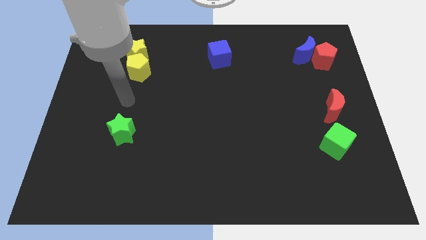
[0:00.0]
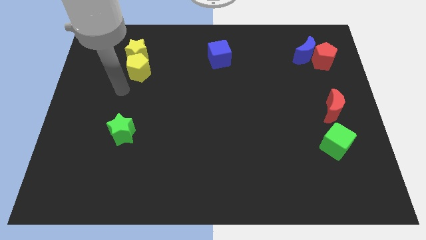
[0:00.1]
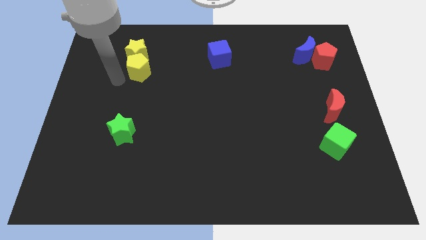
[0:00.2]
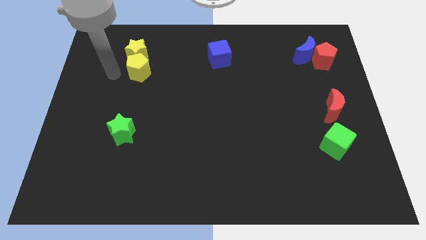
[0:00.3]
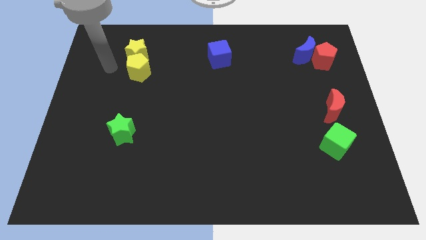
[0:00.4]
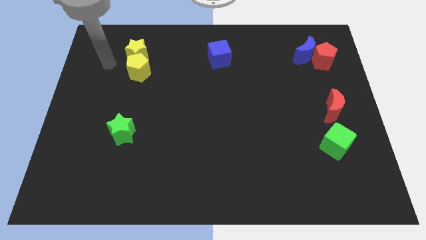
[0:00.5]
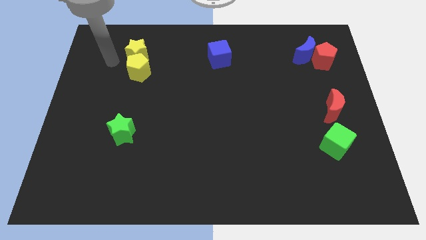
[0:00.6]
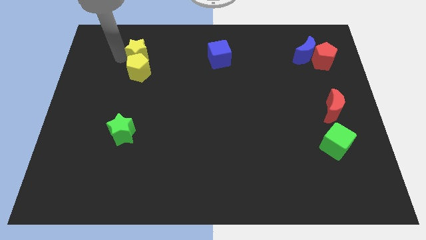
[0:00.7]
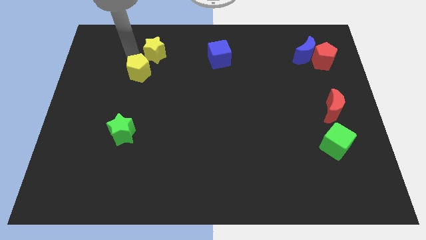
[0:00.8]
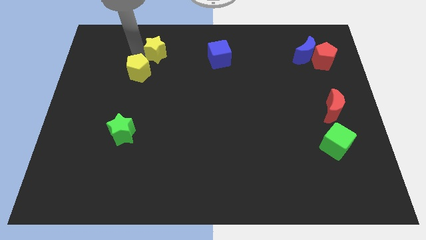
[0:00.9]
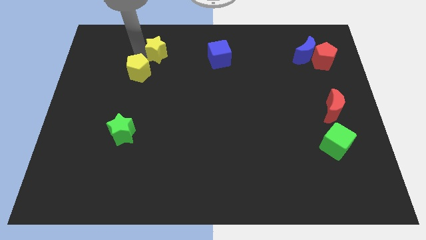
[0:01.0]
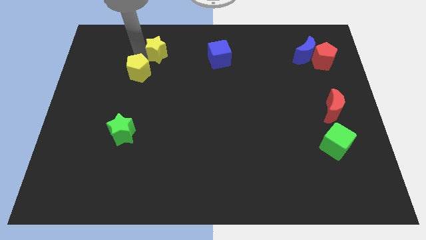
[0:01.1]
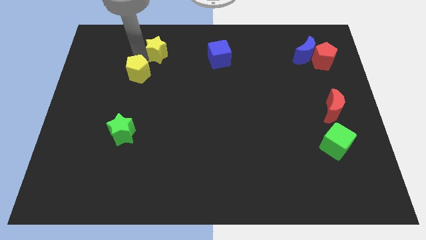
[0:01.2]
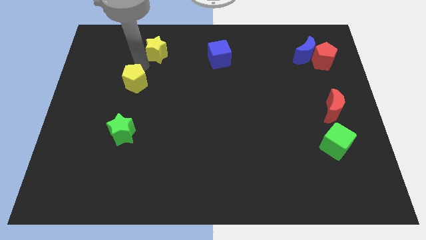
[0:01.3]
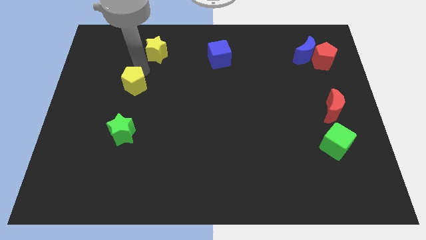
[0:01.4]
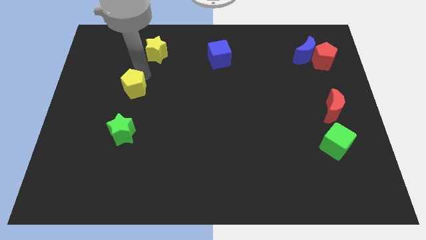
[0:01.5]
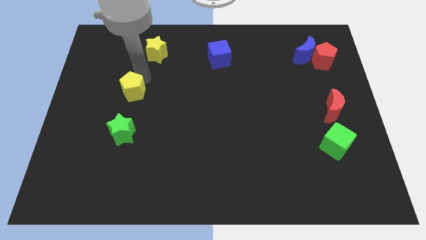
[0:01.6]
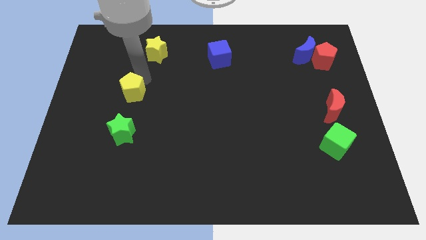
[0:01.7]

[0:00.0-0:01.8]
separate the yellow pentagon from yellow star

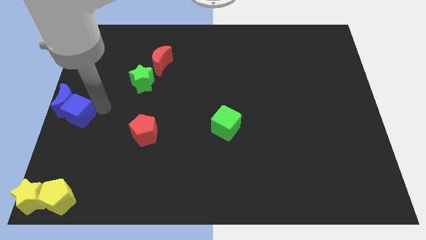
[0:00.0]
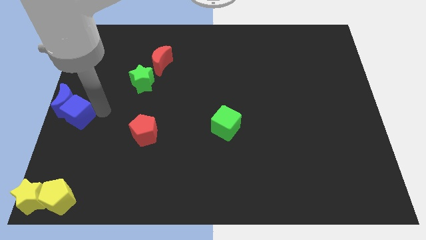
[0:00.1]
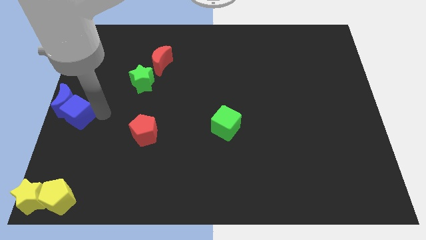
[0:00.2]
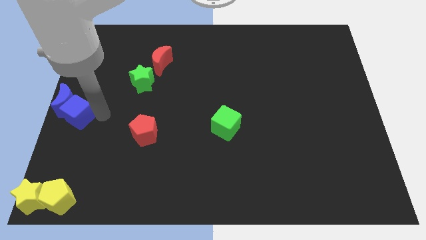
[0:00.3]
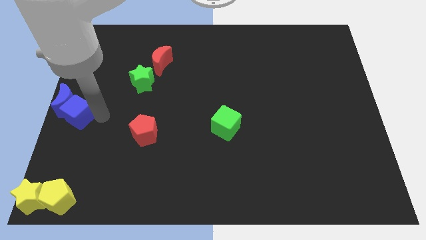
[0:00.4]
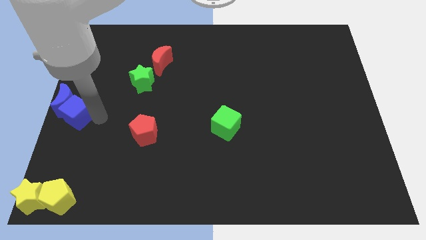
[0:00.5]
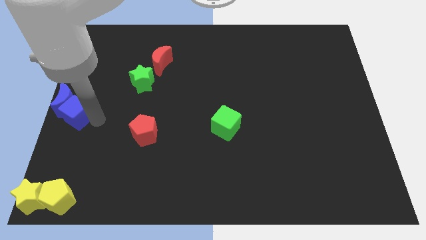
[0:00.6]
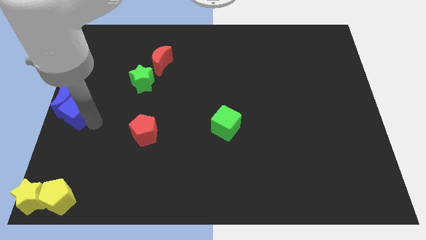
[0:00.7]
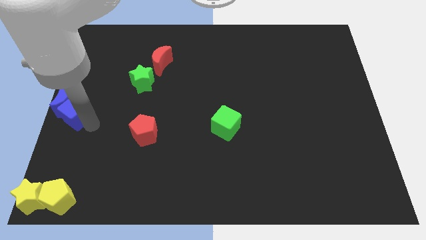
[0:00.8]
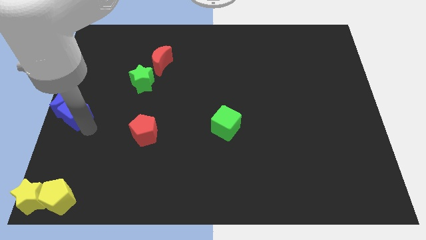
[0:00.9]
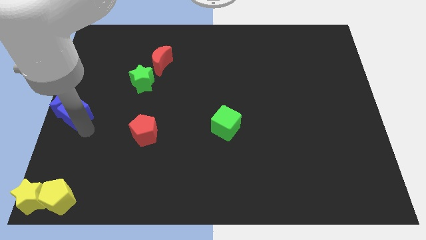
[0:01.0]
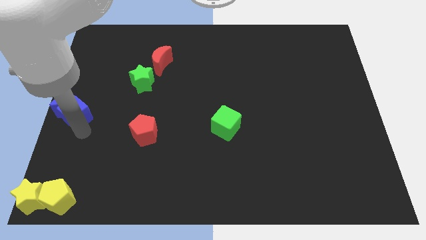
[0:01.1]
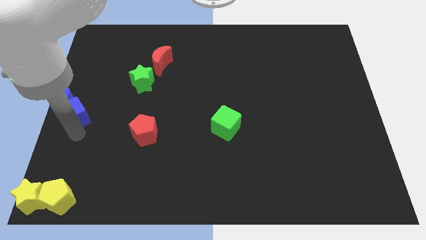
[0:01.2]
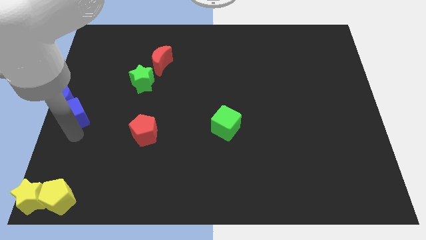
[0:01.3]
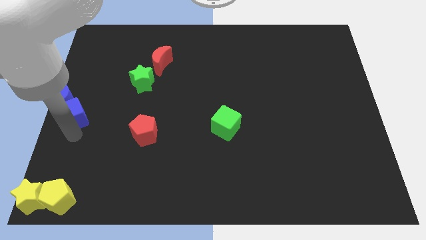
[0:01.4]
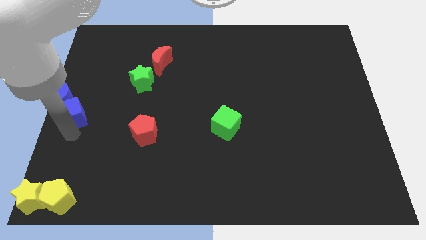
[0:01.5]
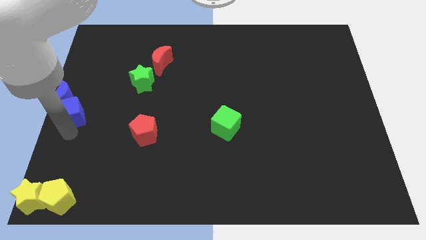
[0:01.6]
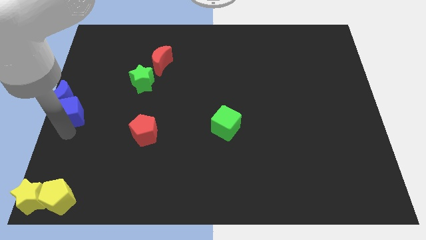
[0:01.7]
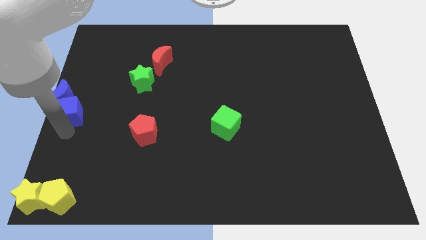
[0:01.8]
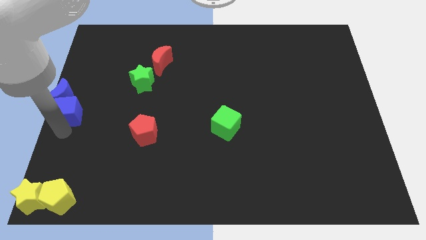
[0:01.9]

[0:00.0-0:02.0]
adjust the blue cube vertically above the yellow blocks

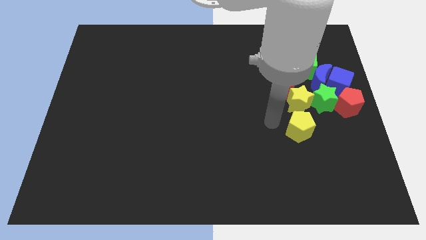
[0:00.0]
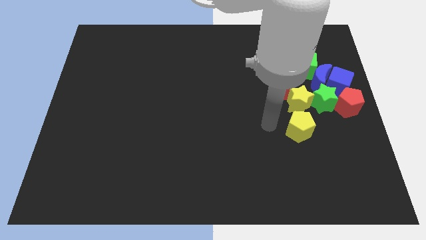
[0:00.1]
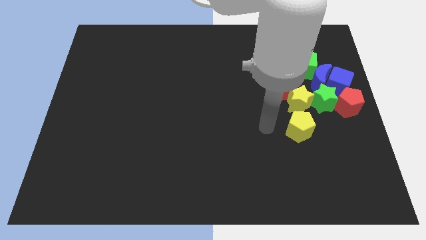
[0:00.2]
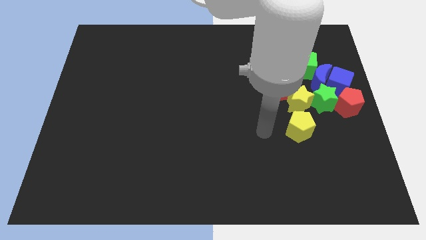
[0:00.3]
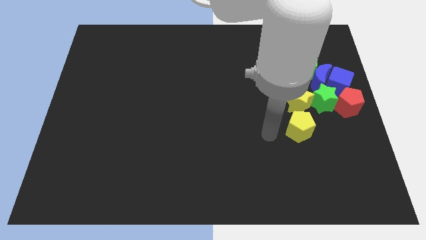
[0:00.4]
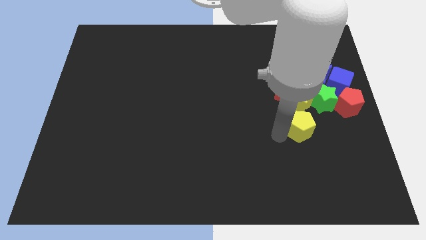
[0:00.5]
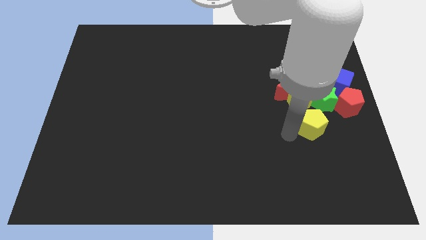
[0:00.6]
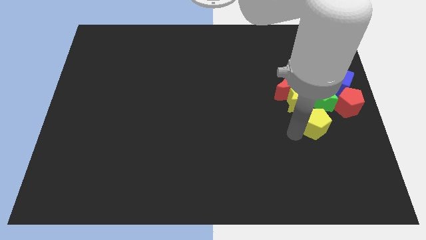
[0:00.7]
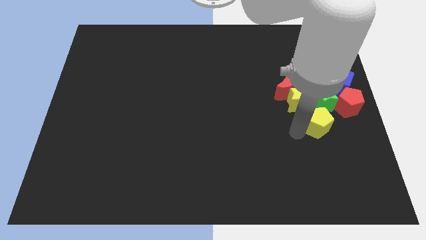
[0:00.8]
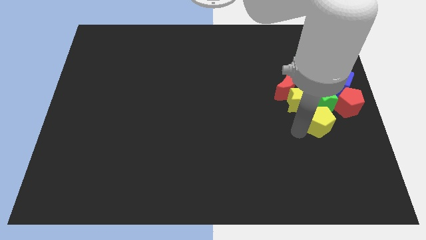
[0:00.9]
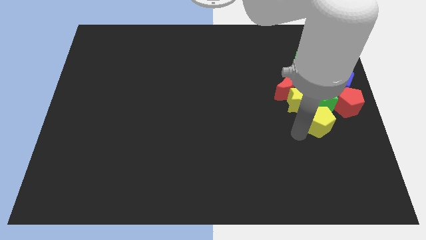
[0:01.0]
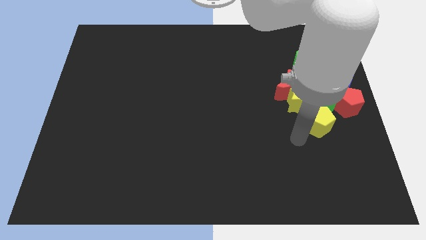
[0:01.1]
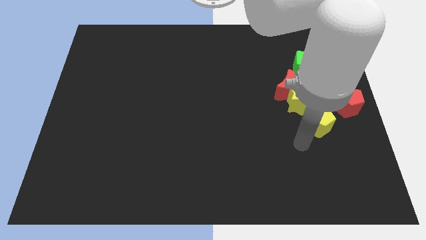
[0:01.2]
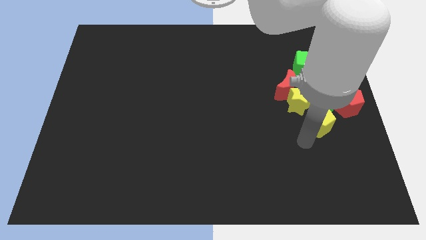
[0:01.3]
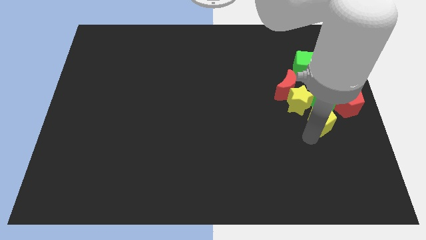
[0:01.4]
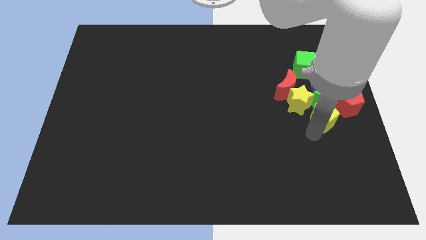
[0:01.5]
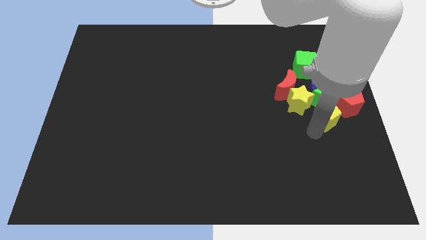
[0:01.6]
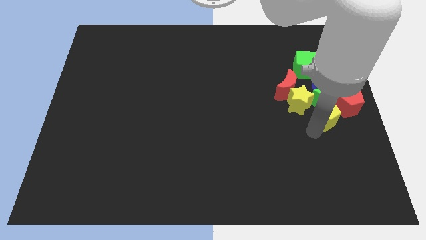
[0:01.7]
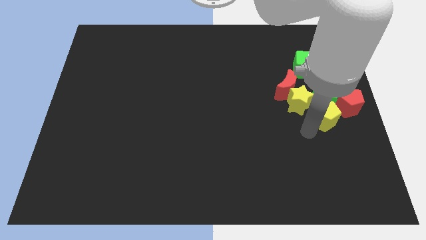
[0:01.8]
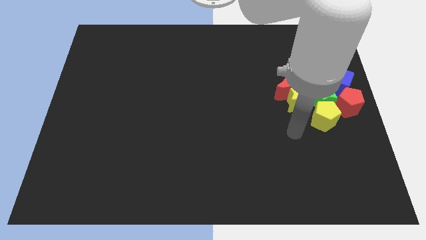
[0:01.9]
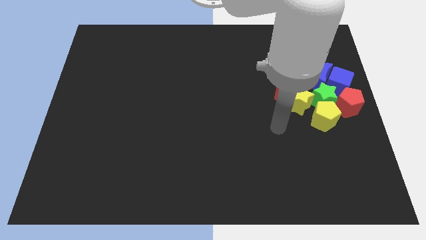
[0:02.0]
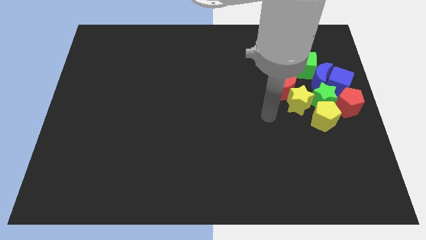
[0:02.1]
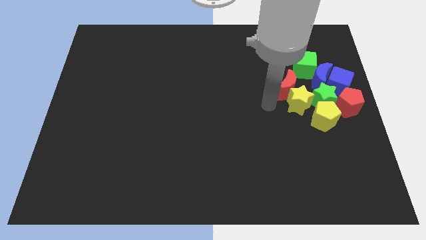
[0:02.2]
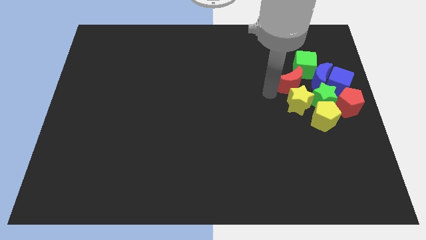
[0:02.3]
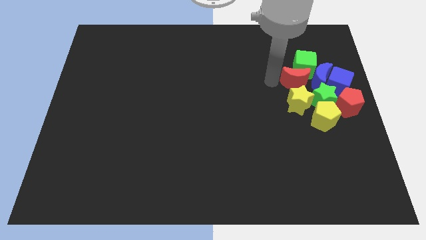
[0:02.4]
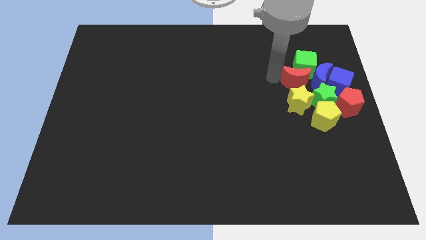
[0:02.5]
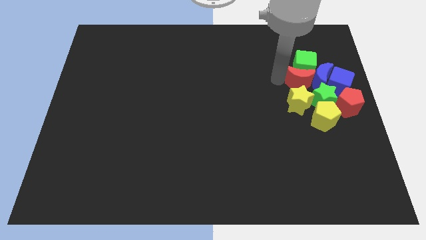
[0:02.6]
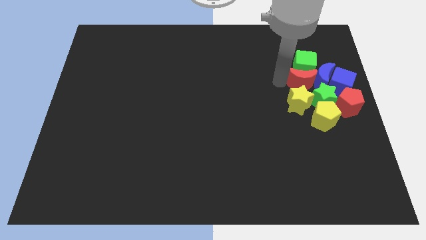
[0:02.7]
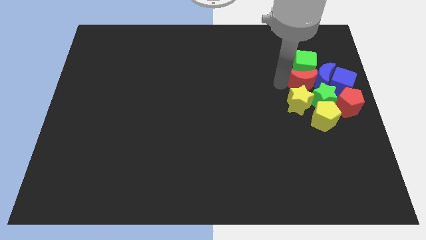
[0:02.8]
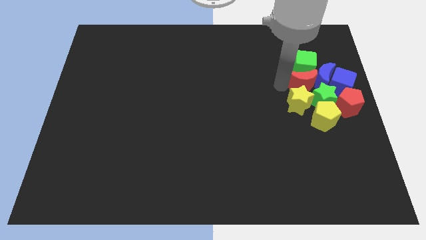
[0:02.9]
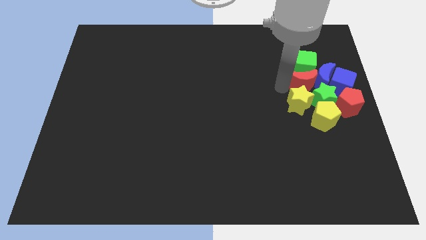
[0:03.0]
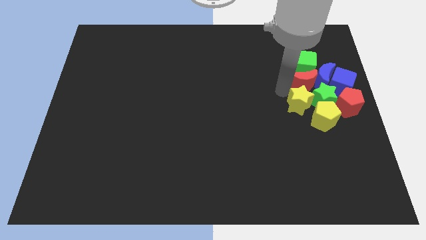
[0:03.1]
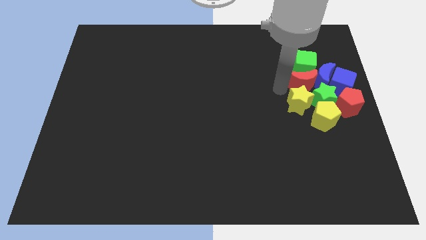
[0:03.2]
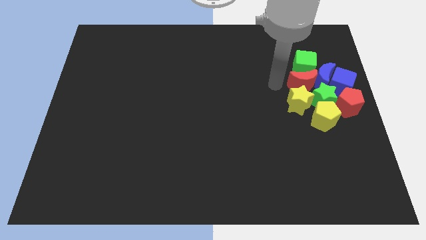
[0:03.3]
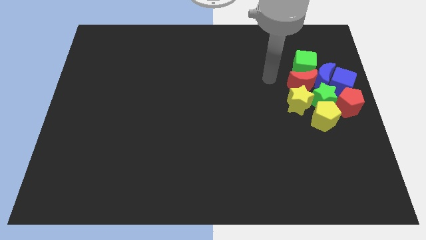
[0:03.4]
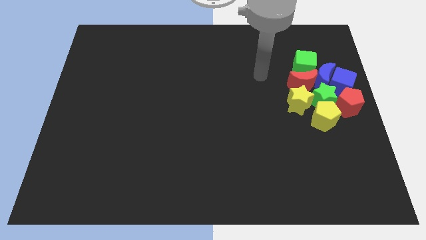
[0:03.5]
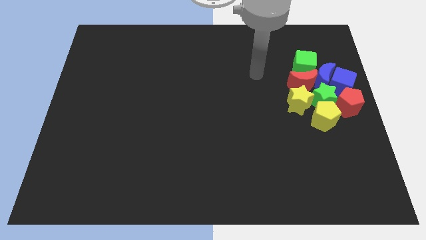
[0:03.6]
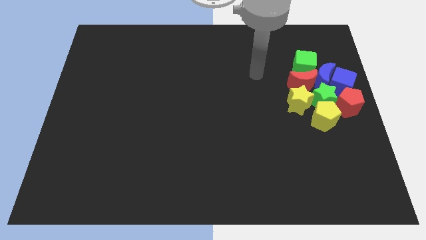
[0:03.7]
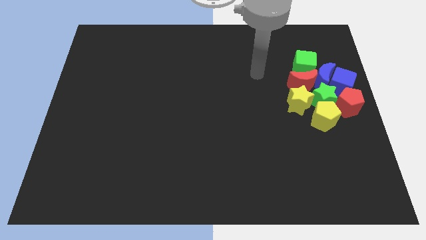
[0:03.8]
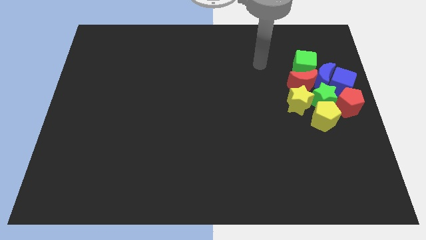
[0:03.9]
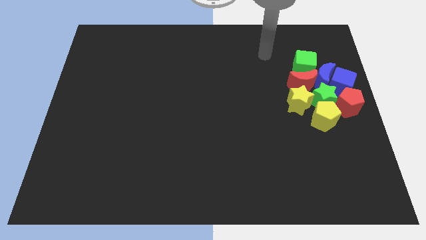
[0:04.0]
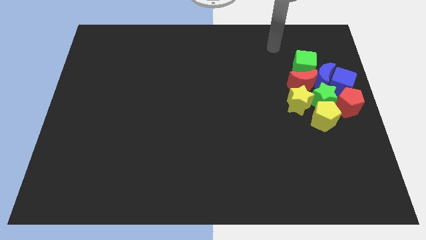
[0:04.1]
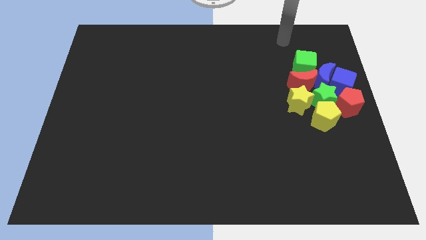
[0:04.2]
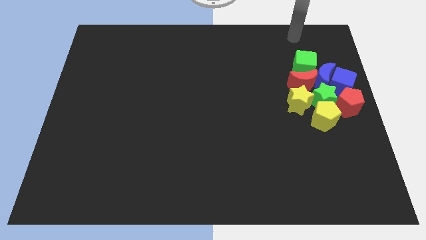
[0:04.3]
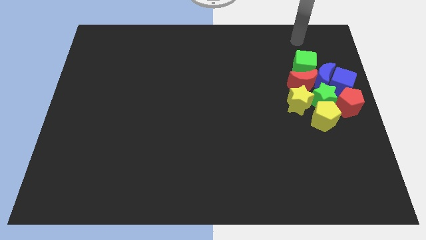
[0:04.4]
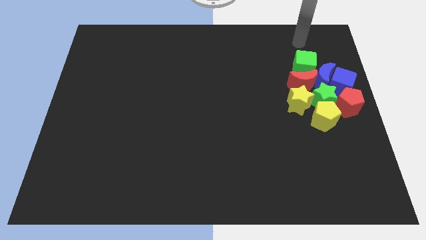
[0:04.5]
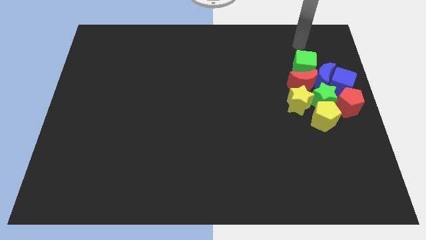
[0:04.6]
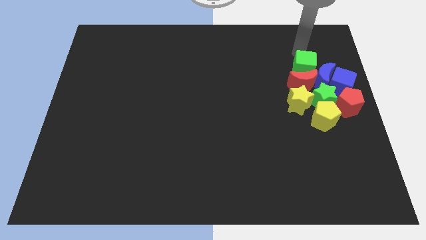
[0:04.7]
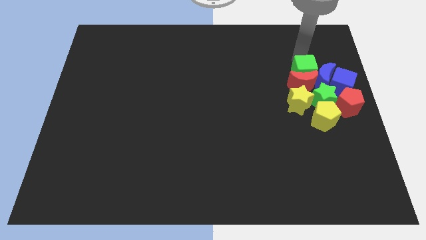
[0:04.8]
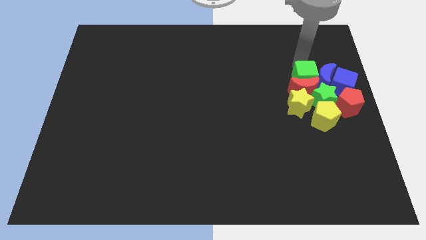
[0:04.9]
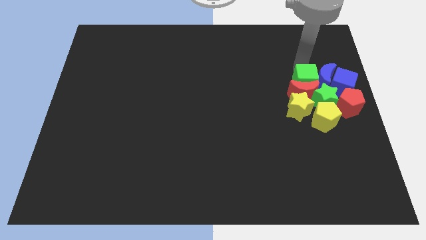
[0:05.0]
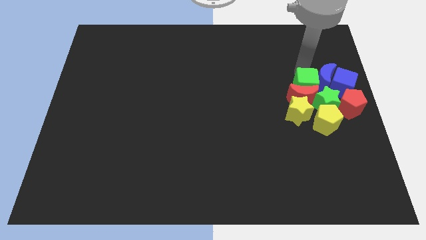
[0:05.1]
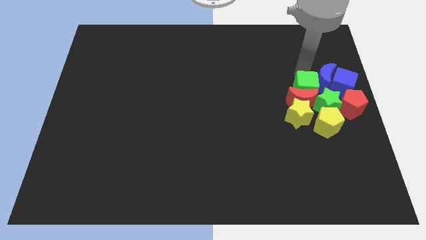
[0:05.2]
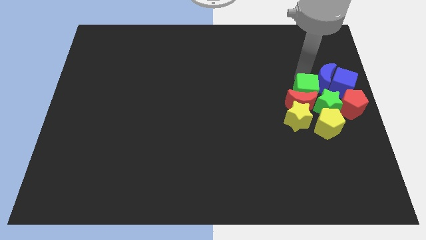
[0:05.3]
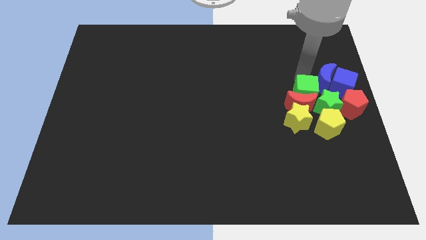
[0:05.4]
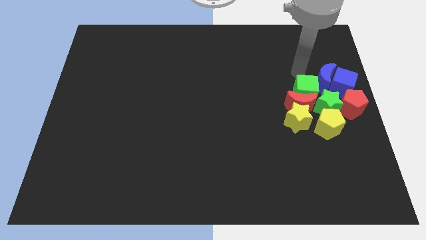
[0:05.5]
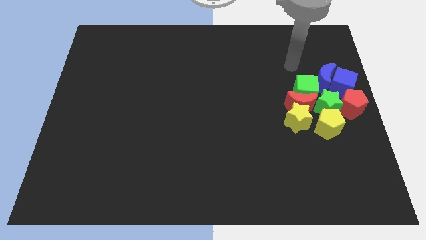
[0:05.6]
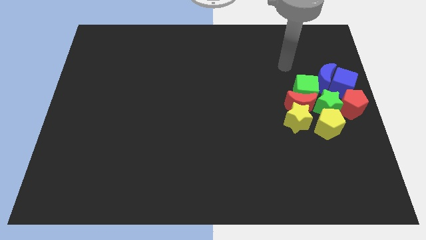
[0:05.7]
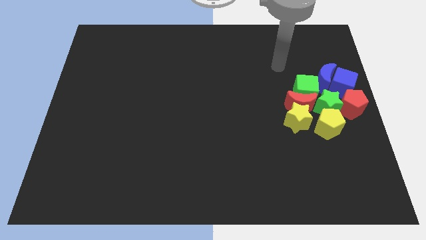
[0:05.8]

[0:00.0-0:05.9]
move your arm away from the yellow pentagon
